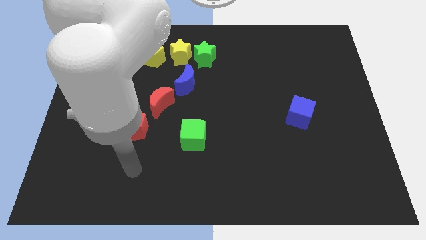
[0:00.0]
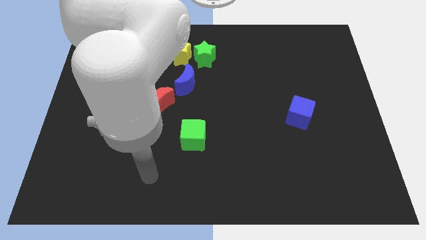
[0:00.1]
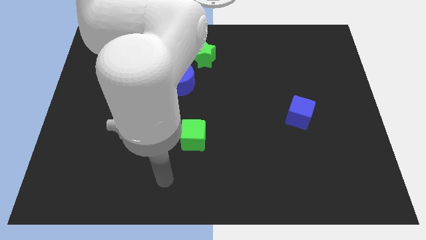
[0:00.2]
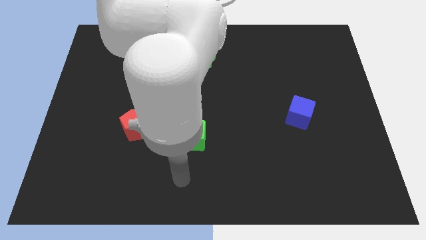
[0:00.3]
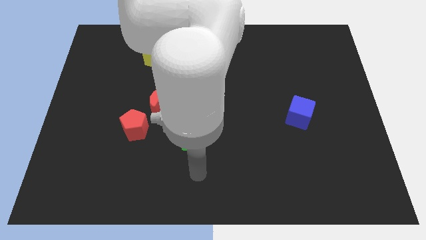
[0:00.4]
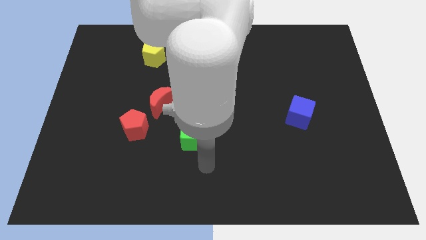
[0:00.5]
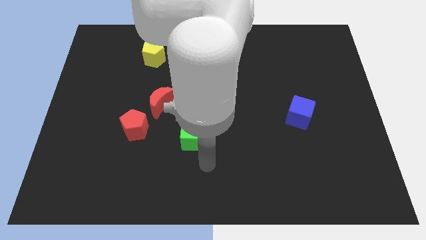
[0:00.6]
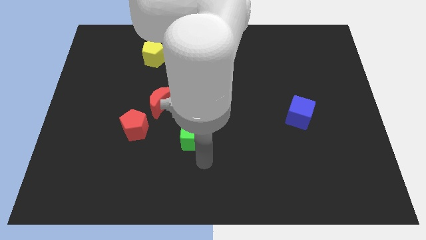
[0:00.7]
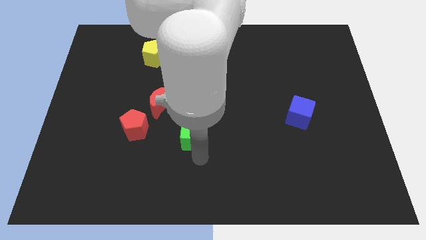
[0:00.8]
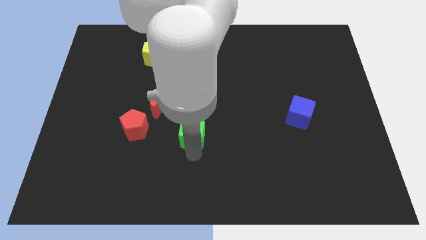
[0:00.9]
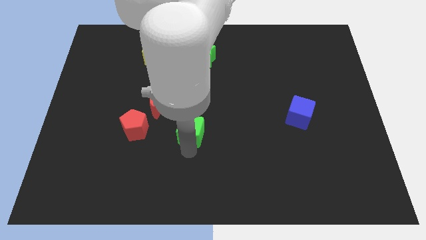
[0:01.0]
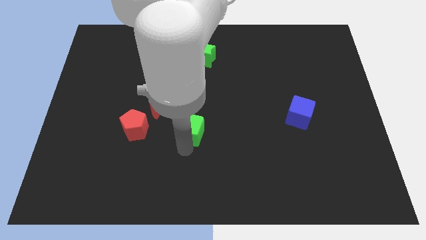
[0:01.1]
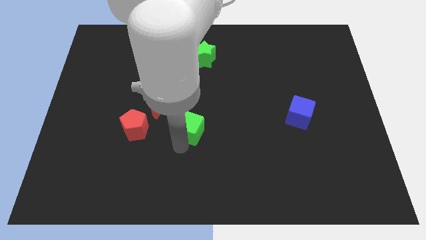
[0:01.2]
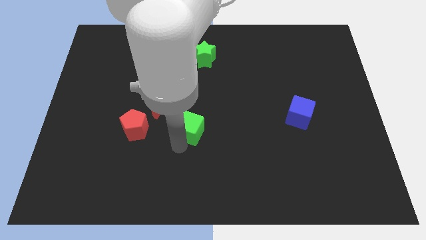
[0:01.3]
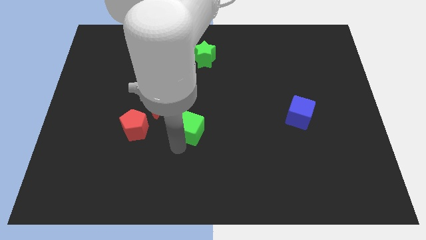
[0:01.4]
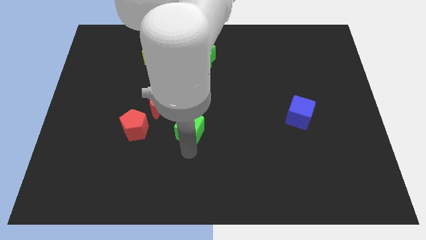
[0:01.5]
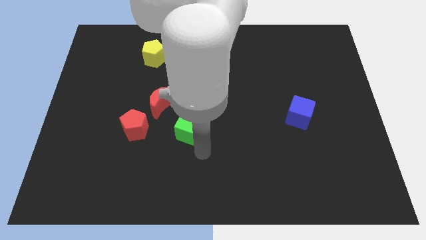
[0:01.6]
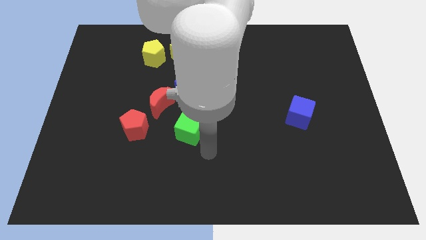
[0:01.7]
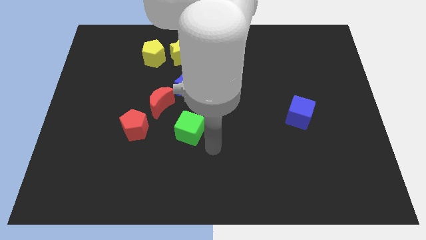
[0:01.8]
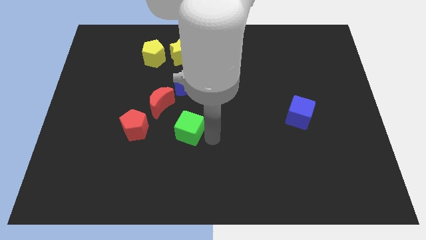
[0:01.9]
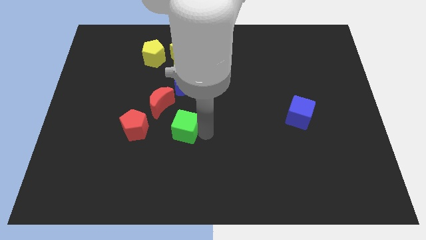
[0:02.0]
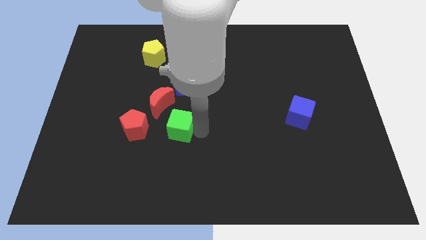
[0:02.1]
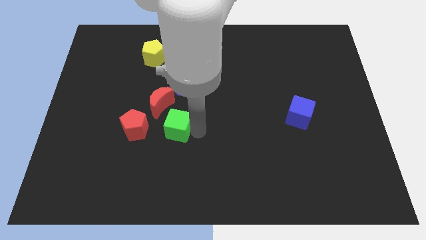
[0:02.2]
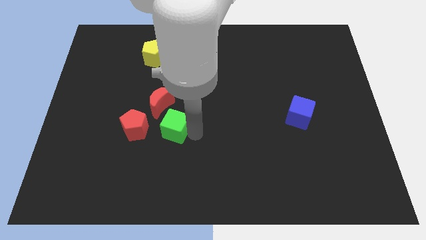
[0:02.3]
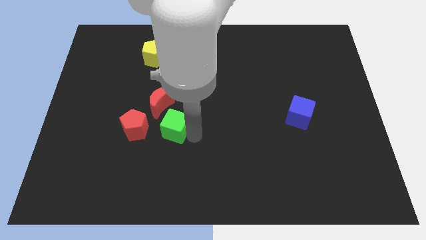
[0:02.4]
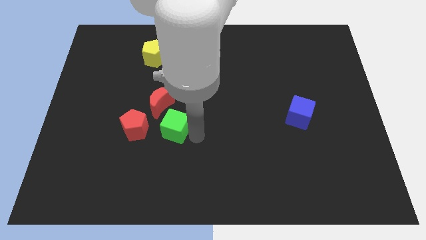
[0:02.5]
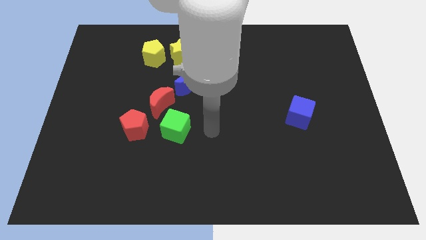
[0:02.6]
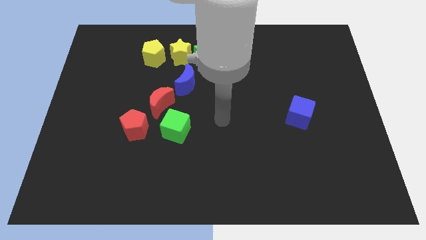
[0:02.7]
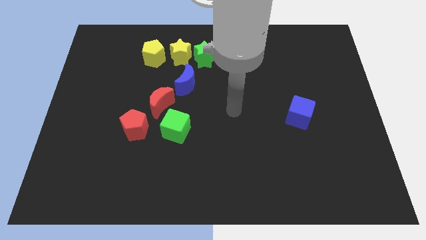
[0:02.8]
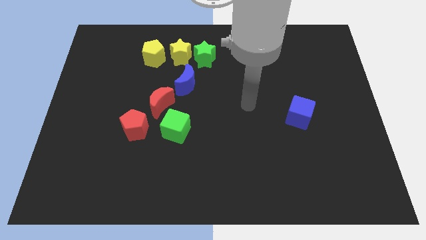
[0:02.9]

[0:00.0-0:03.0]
push the green cube to the bottom right side of the red moon

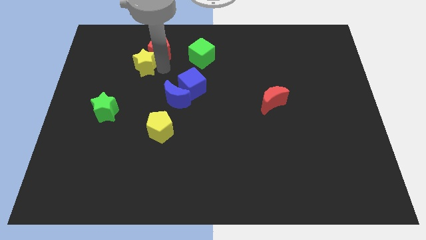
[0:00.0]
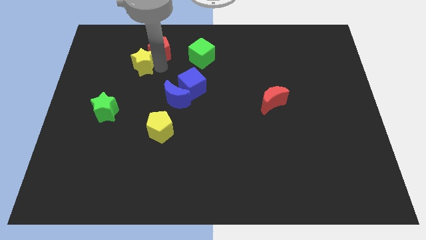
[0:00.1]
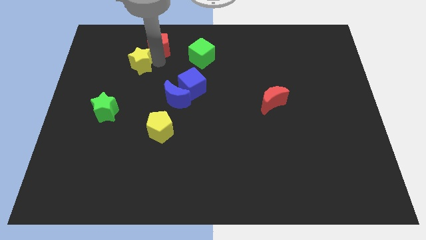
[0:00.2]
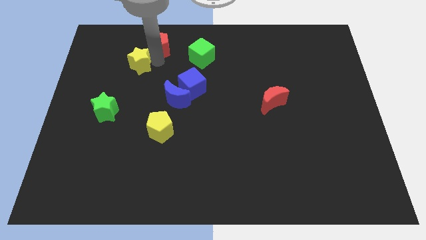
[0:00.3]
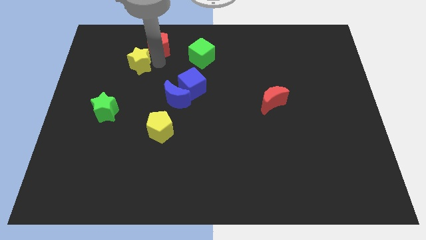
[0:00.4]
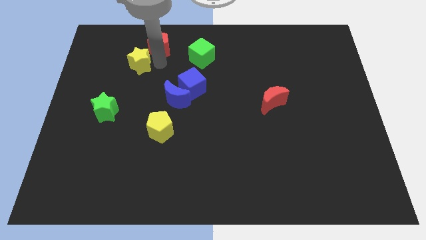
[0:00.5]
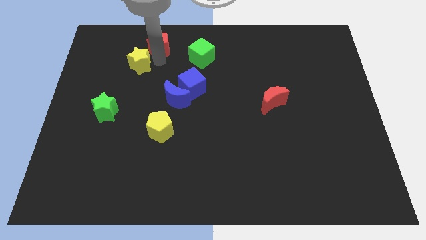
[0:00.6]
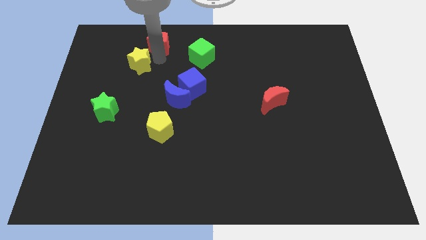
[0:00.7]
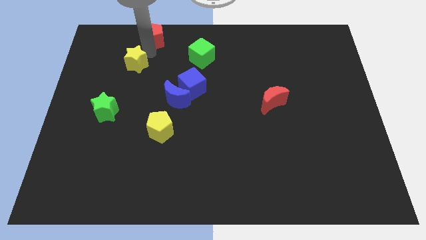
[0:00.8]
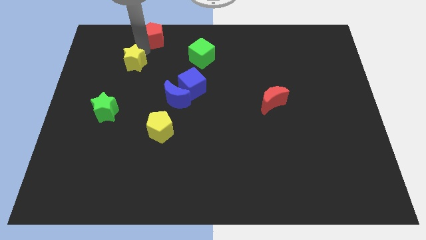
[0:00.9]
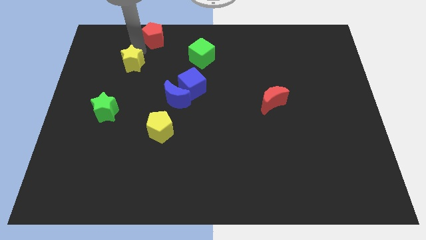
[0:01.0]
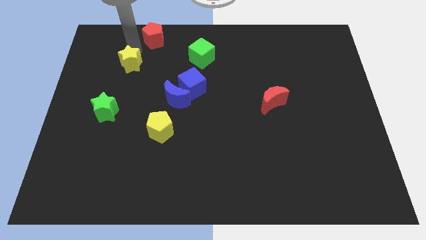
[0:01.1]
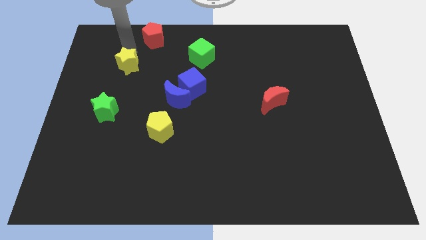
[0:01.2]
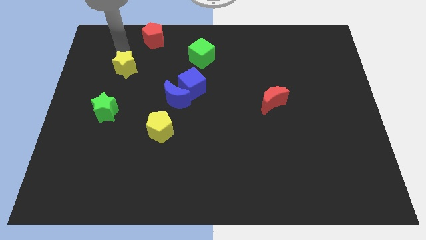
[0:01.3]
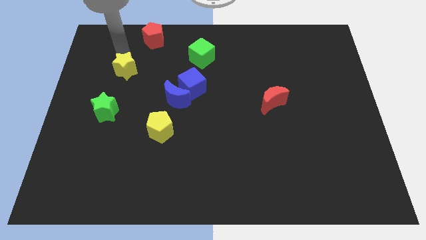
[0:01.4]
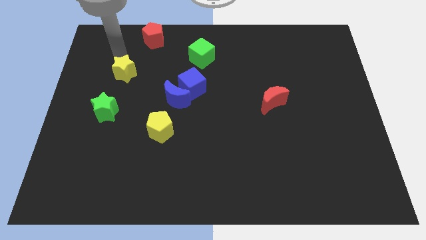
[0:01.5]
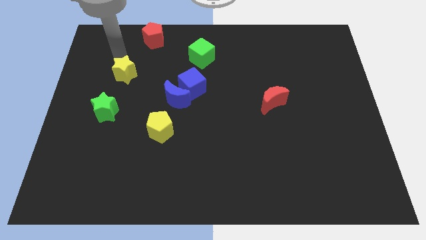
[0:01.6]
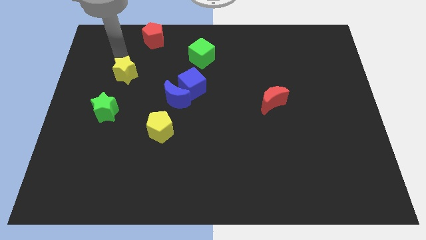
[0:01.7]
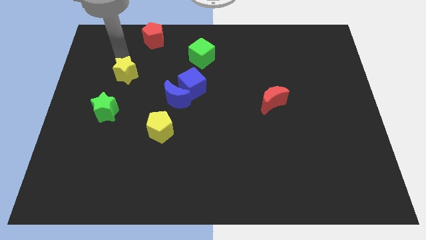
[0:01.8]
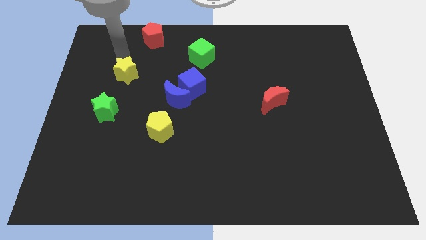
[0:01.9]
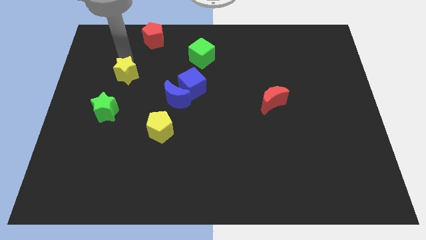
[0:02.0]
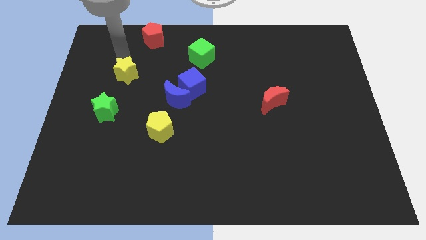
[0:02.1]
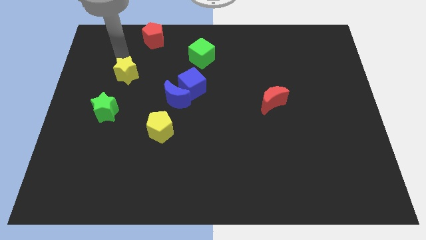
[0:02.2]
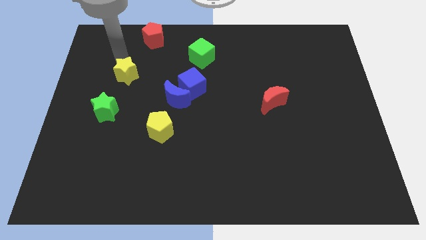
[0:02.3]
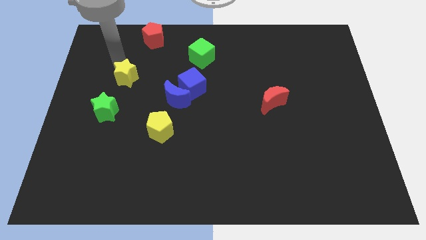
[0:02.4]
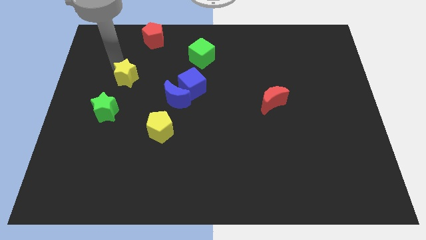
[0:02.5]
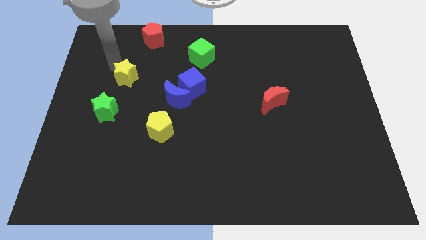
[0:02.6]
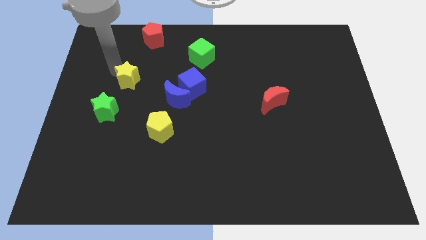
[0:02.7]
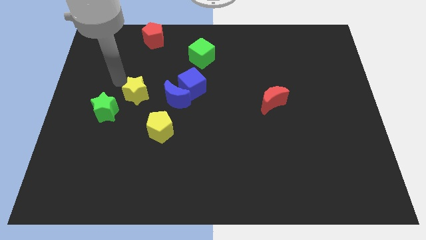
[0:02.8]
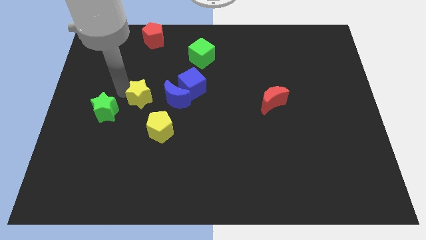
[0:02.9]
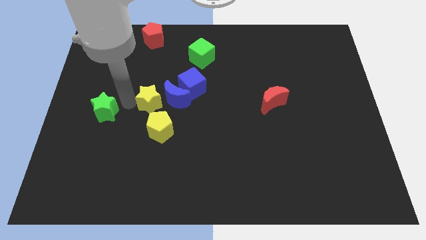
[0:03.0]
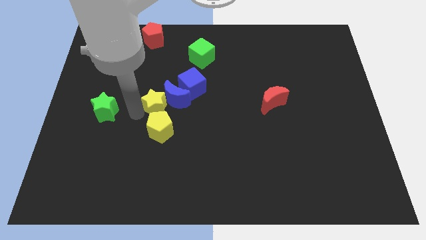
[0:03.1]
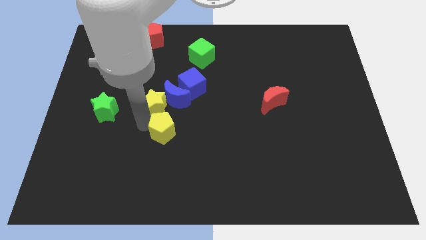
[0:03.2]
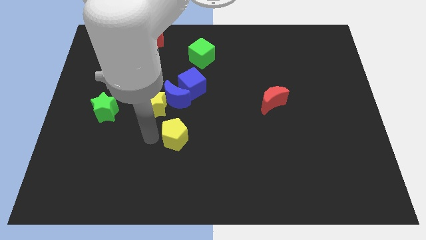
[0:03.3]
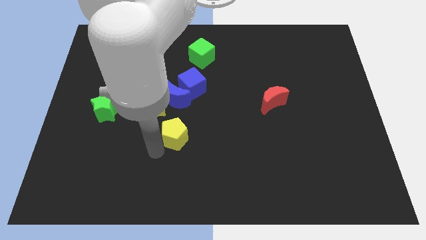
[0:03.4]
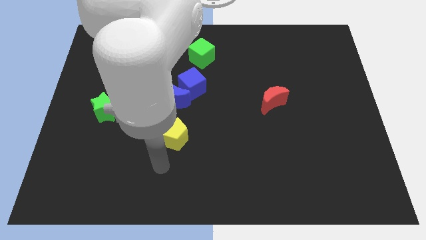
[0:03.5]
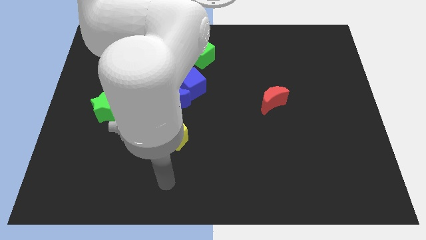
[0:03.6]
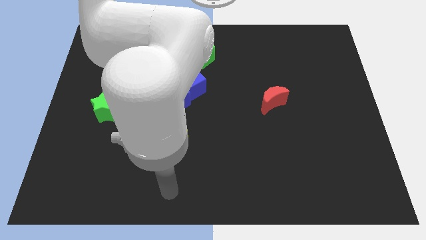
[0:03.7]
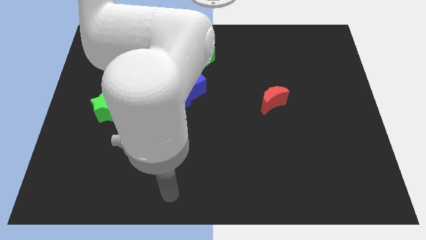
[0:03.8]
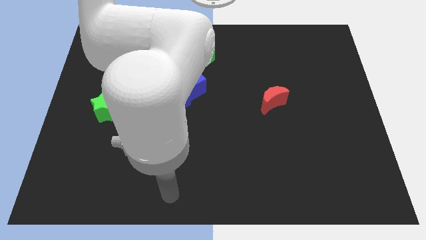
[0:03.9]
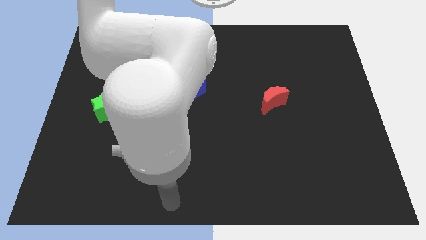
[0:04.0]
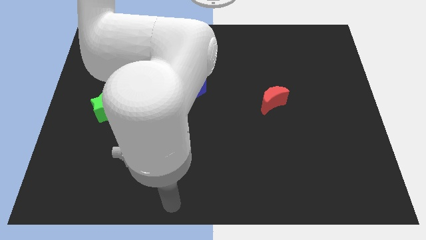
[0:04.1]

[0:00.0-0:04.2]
move the yellow star above the yellow pentagon

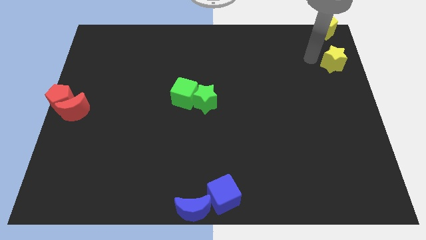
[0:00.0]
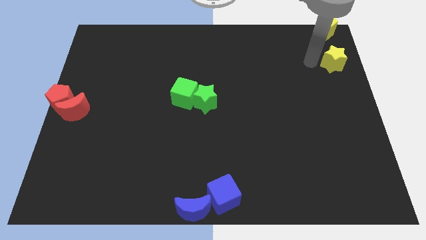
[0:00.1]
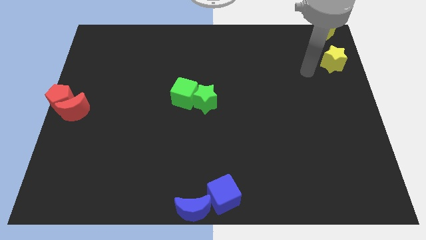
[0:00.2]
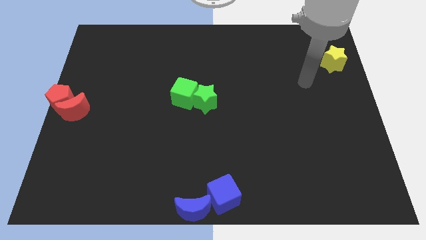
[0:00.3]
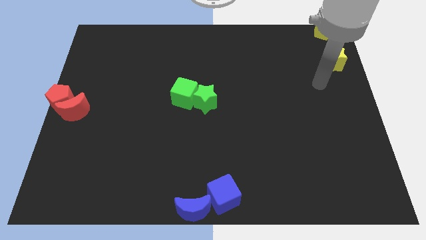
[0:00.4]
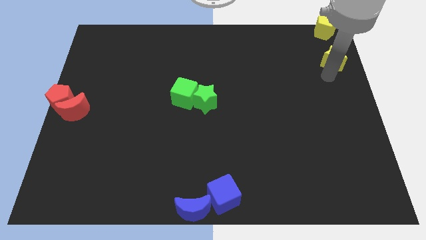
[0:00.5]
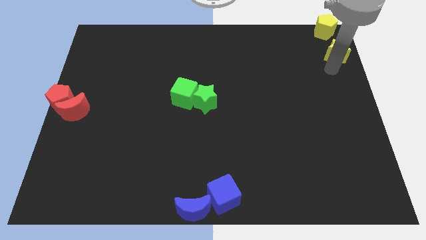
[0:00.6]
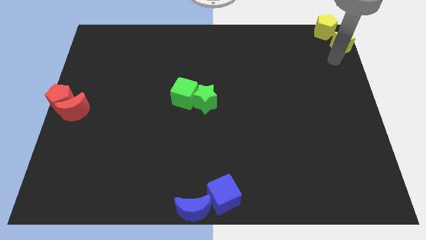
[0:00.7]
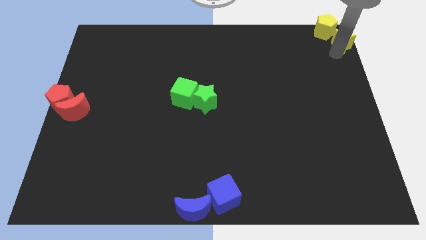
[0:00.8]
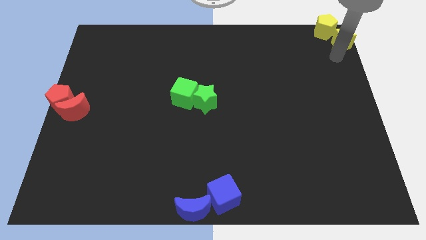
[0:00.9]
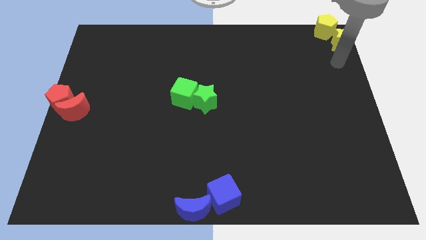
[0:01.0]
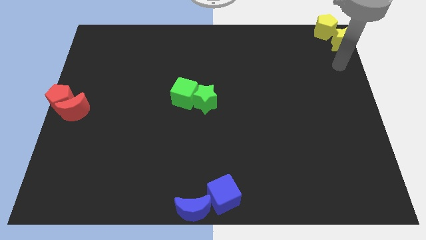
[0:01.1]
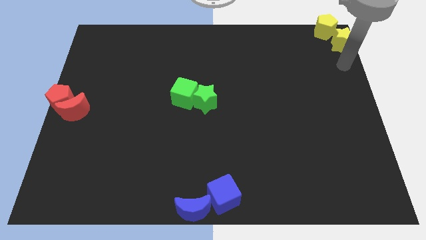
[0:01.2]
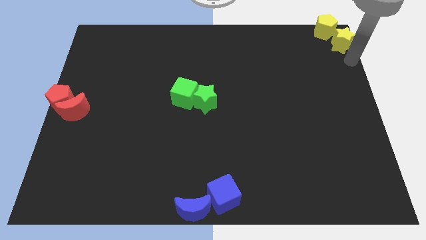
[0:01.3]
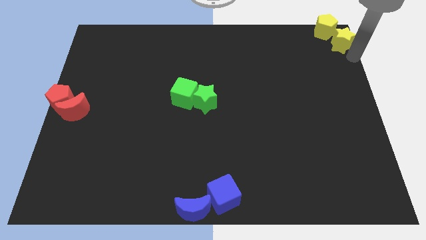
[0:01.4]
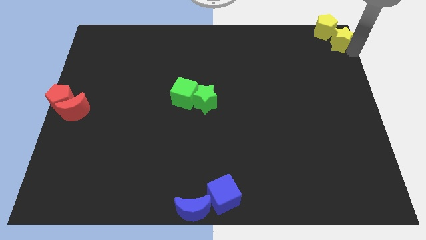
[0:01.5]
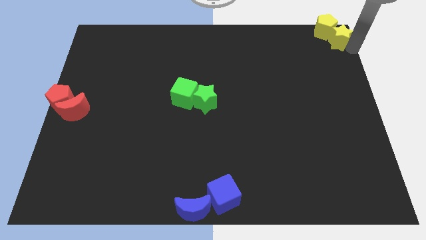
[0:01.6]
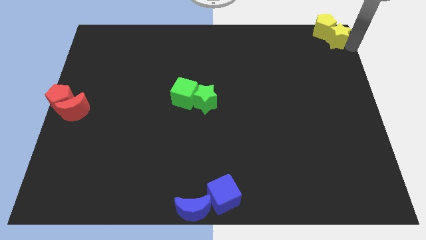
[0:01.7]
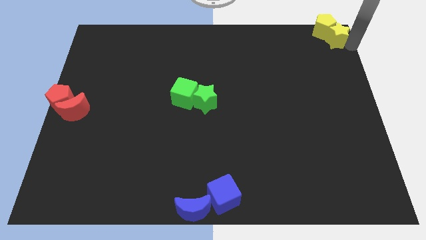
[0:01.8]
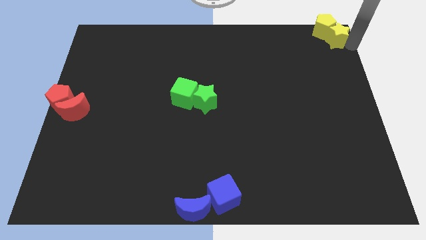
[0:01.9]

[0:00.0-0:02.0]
push the yellow star to the top right corner of the board

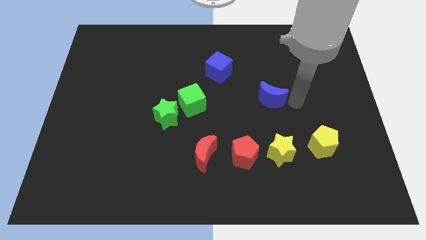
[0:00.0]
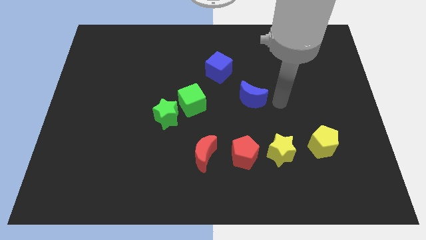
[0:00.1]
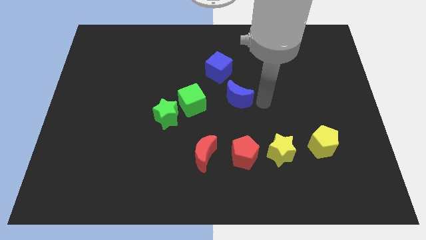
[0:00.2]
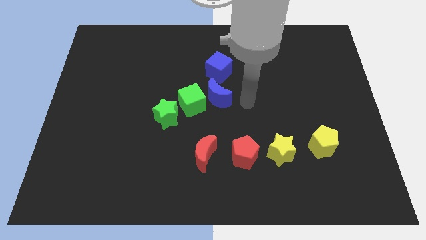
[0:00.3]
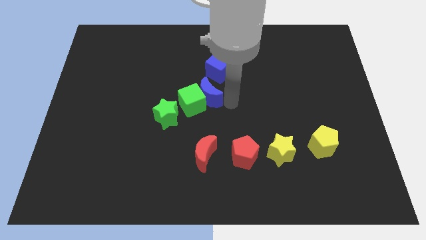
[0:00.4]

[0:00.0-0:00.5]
place blue moon to the bottom of blue cube
